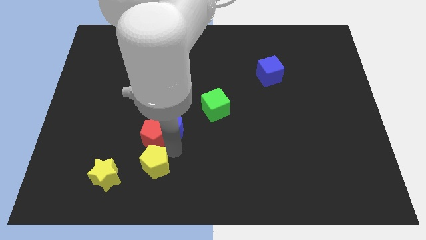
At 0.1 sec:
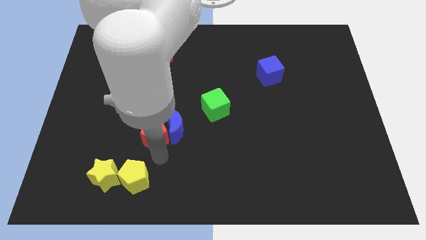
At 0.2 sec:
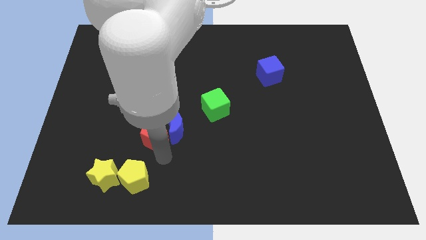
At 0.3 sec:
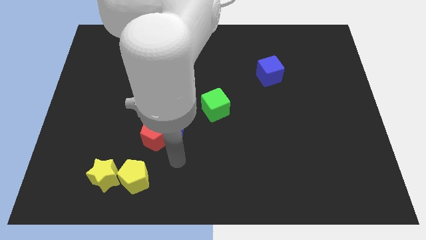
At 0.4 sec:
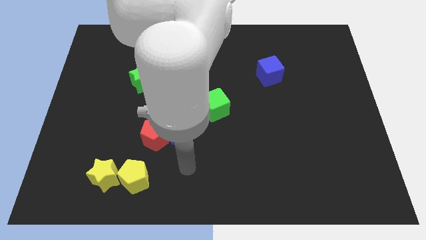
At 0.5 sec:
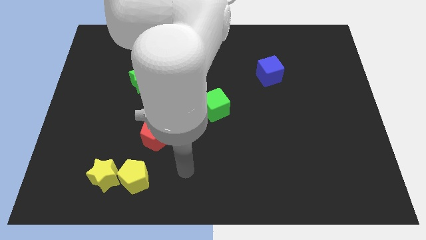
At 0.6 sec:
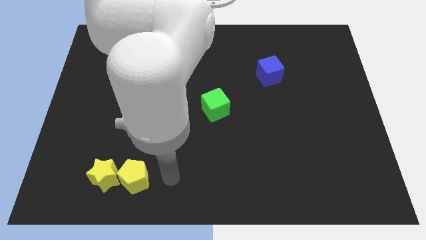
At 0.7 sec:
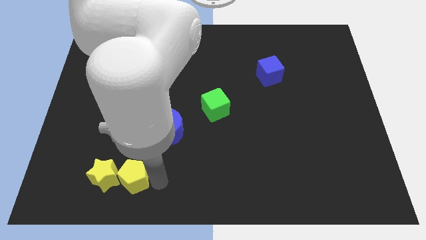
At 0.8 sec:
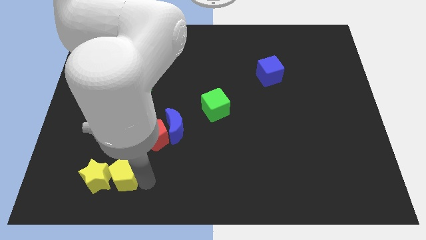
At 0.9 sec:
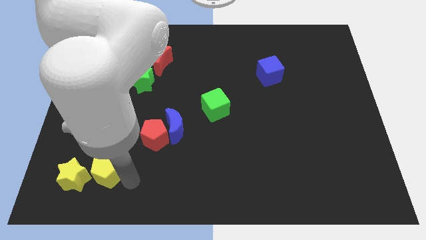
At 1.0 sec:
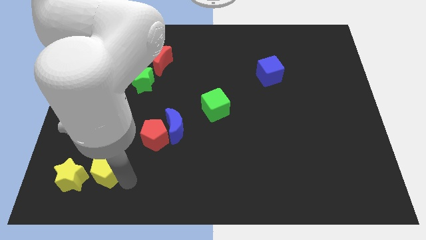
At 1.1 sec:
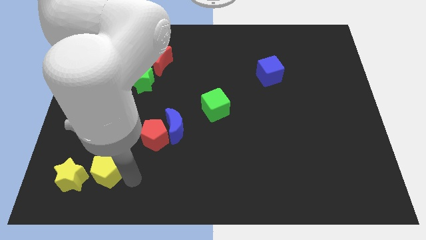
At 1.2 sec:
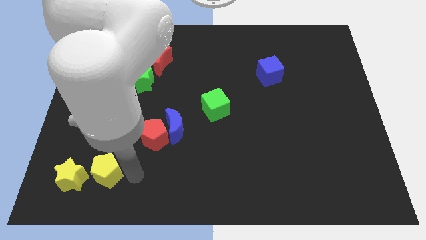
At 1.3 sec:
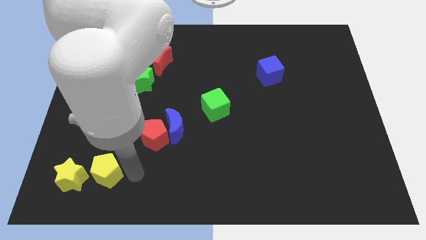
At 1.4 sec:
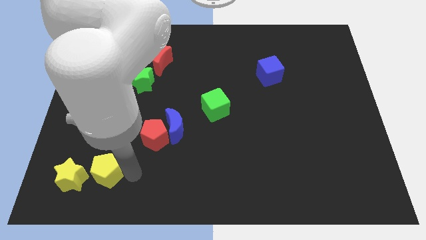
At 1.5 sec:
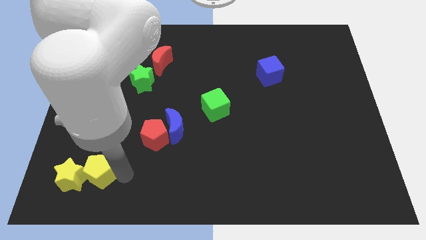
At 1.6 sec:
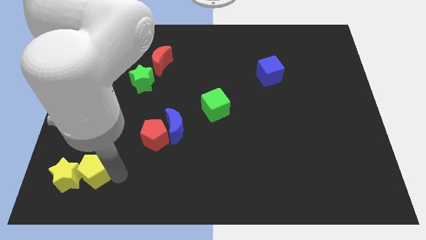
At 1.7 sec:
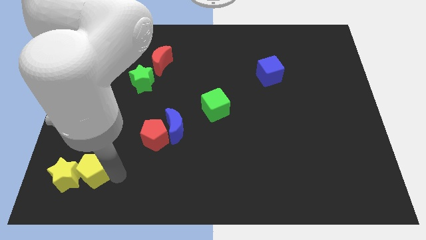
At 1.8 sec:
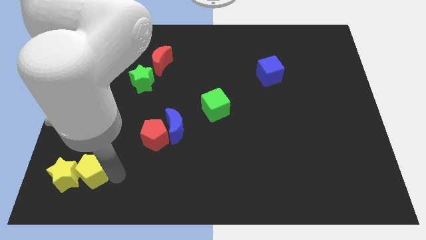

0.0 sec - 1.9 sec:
push the yellow pentagon into the yellow star

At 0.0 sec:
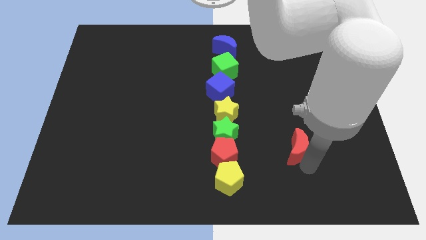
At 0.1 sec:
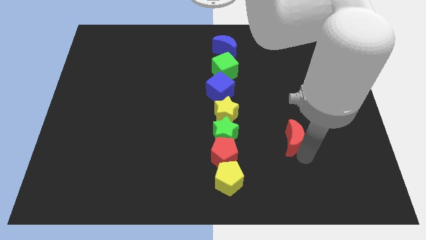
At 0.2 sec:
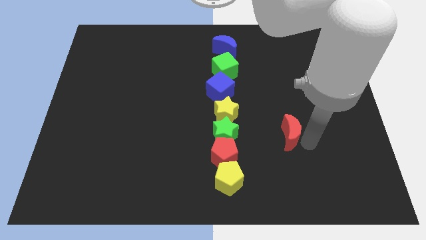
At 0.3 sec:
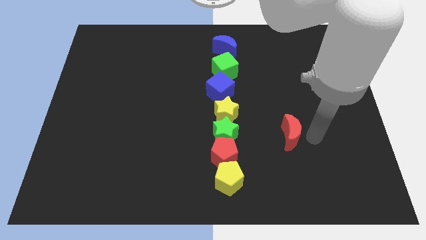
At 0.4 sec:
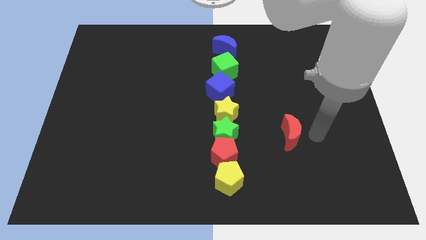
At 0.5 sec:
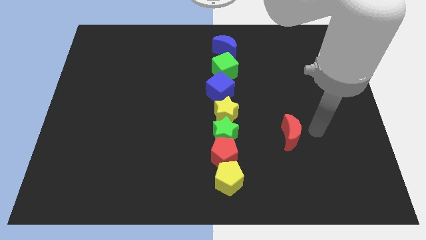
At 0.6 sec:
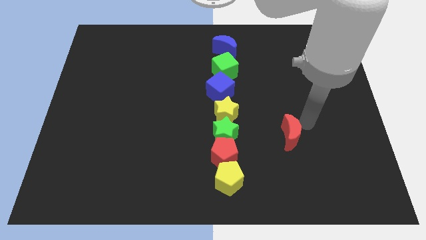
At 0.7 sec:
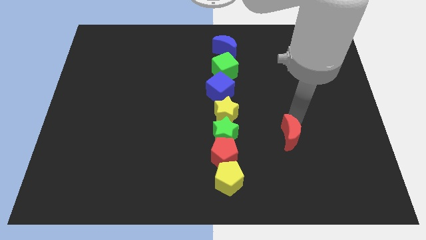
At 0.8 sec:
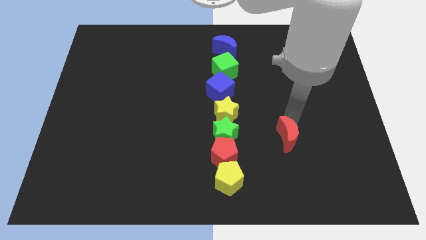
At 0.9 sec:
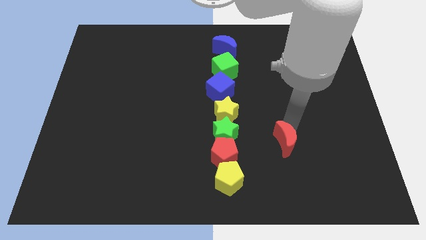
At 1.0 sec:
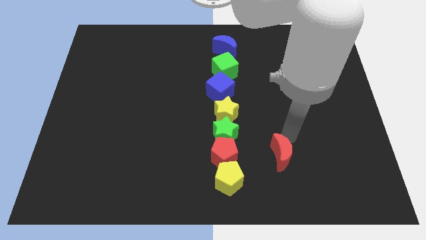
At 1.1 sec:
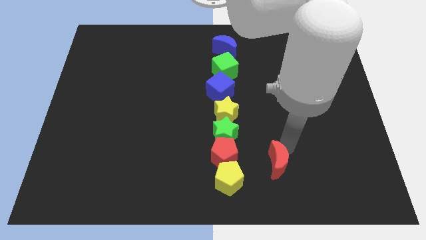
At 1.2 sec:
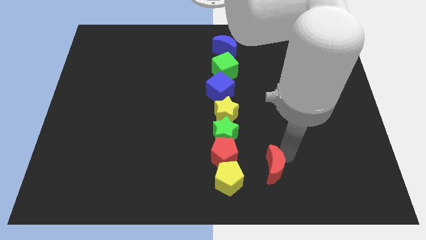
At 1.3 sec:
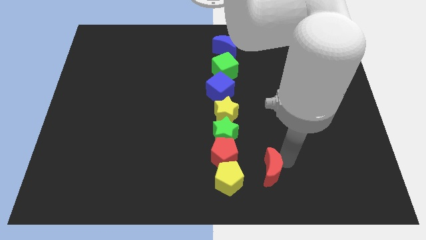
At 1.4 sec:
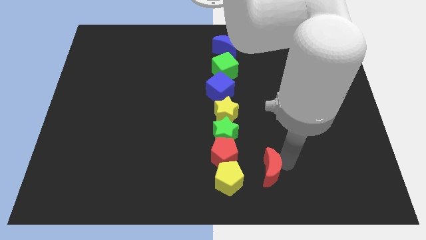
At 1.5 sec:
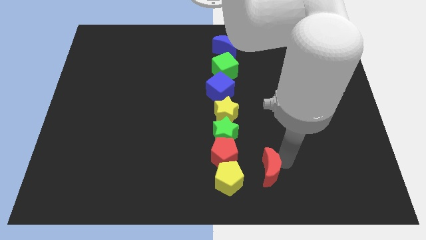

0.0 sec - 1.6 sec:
push the red crescent towards the right side of the yellow pentagon

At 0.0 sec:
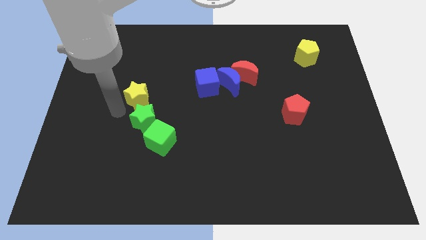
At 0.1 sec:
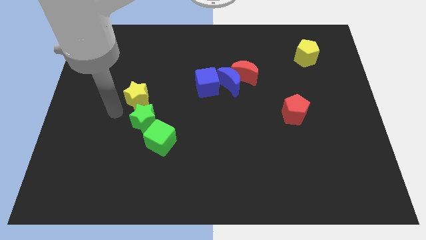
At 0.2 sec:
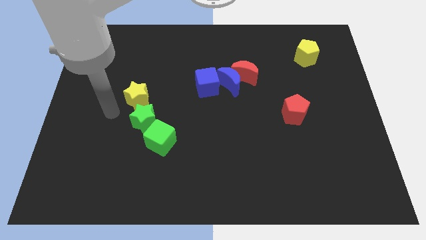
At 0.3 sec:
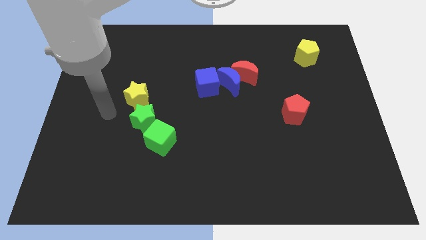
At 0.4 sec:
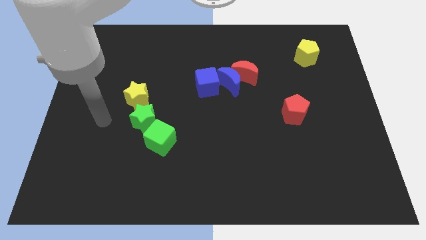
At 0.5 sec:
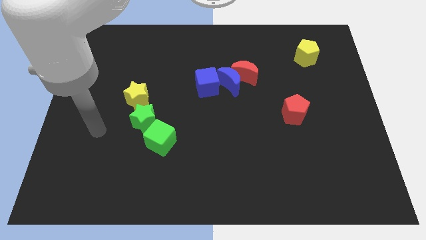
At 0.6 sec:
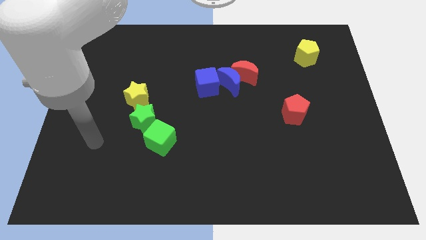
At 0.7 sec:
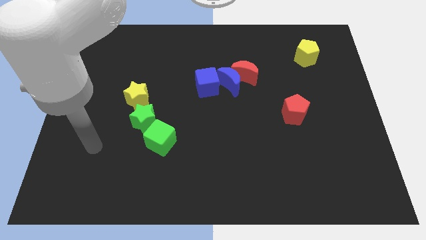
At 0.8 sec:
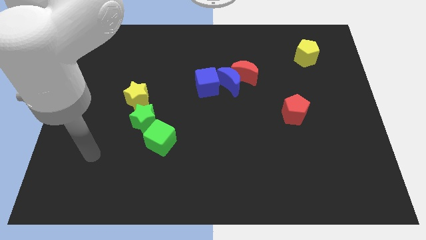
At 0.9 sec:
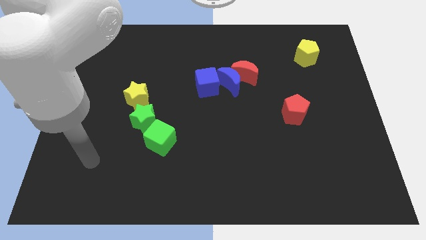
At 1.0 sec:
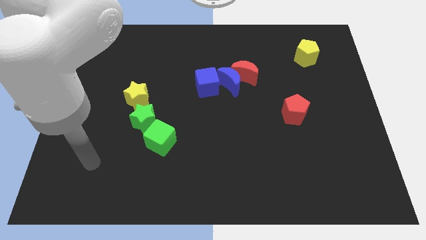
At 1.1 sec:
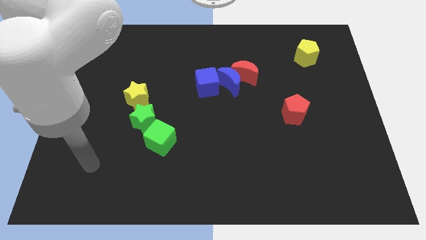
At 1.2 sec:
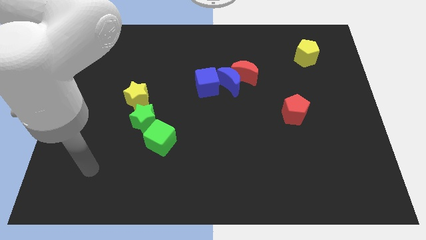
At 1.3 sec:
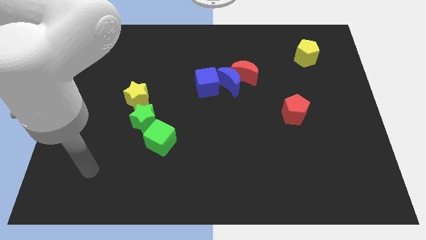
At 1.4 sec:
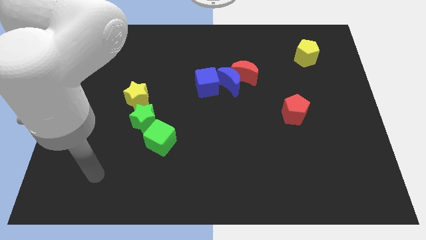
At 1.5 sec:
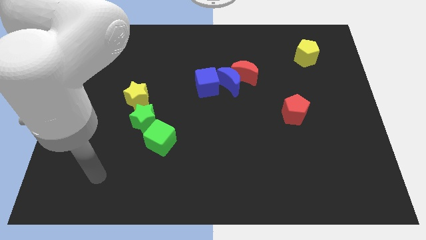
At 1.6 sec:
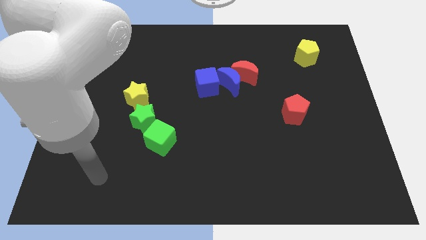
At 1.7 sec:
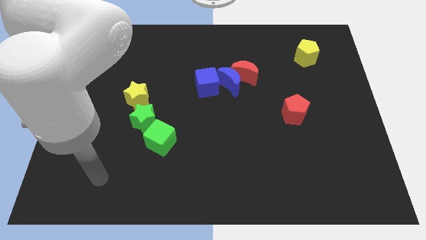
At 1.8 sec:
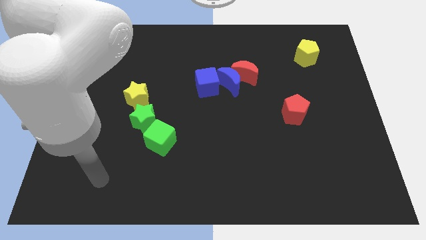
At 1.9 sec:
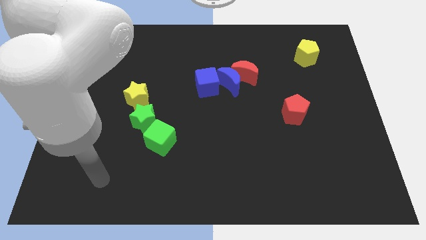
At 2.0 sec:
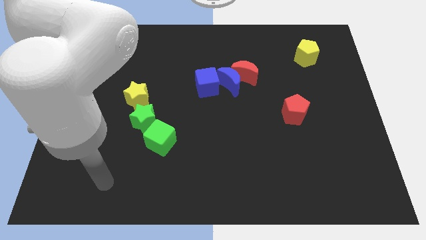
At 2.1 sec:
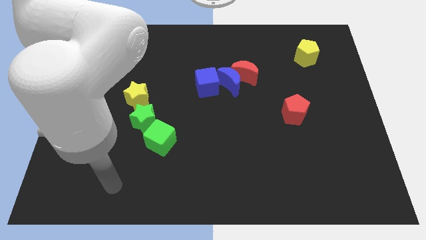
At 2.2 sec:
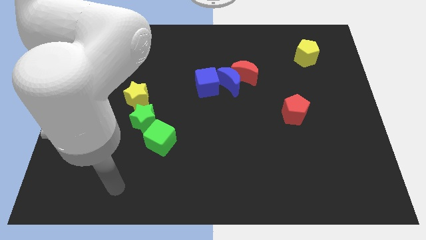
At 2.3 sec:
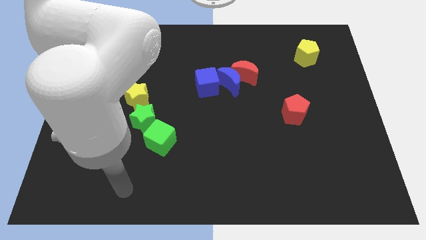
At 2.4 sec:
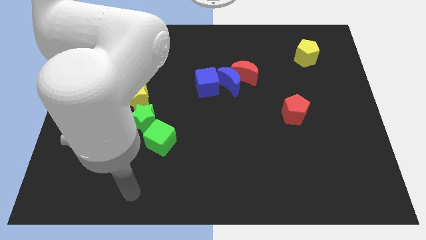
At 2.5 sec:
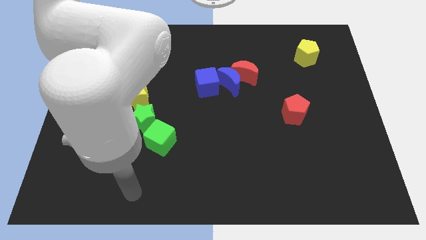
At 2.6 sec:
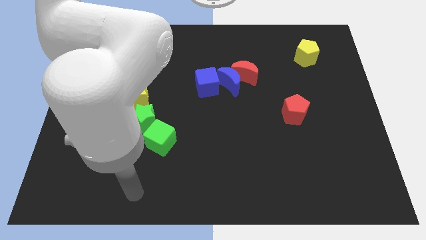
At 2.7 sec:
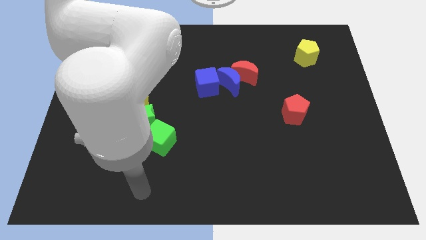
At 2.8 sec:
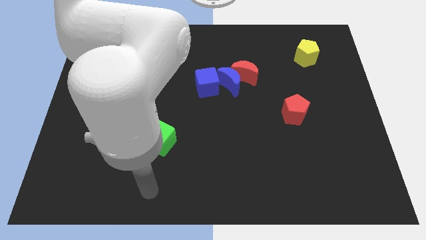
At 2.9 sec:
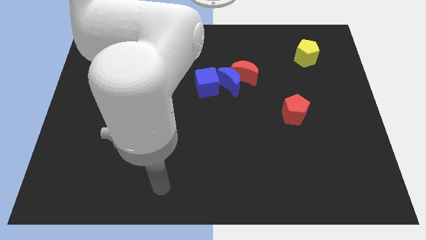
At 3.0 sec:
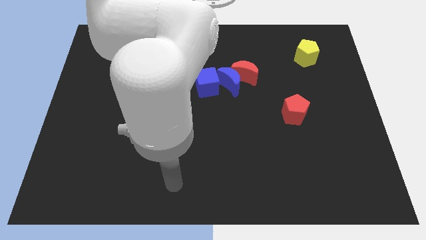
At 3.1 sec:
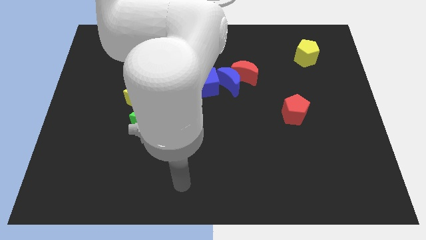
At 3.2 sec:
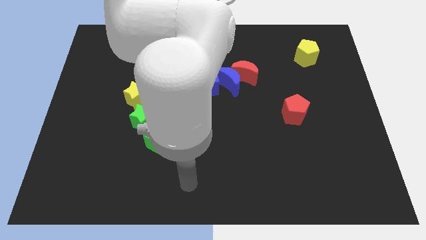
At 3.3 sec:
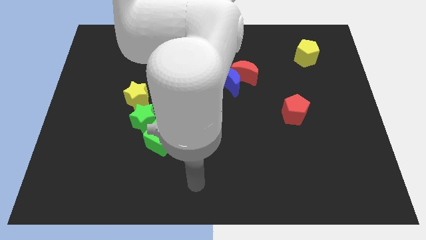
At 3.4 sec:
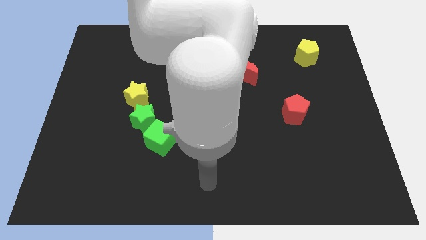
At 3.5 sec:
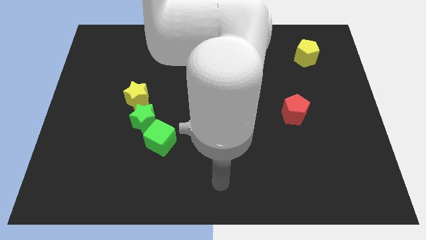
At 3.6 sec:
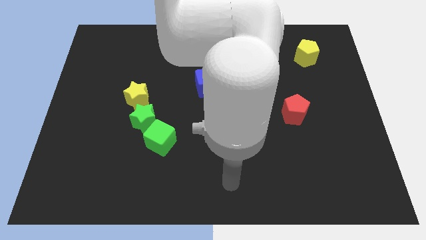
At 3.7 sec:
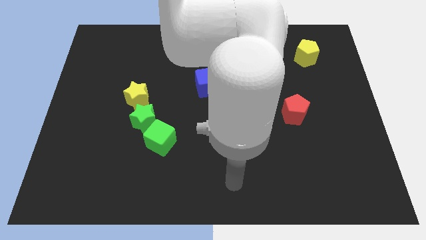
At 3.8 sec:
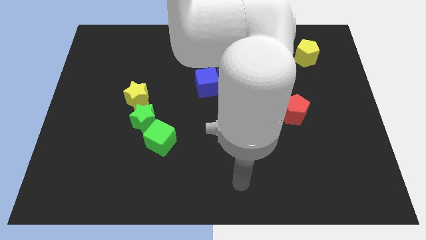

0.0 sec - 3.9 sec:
point the arm at the bottom center of the board

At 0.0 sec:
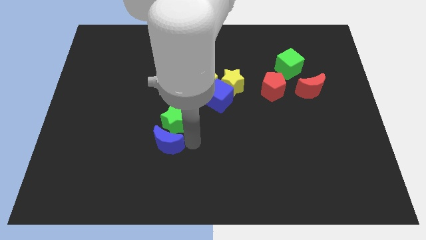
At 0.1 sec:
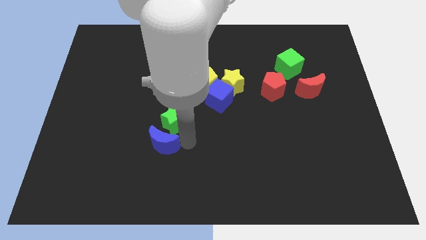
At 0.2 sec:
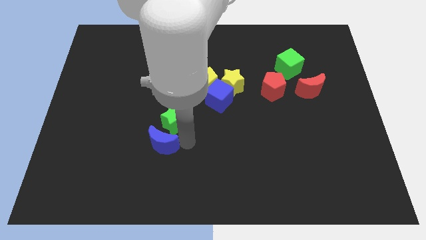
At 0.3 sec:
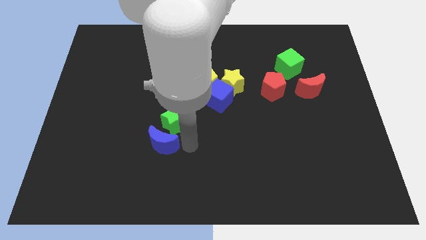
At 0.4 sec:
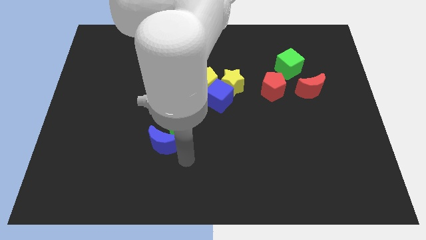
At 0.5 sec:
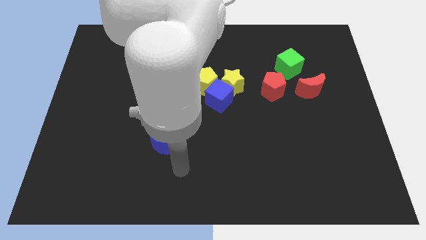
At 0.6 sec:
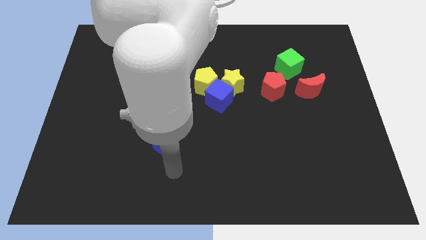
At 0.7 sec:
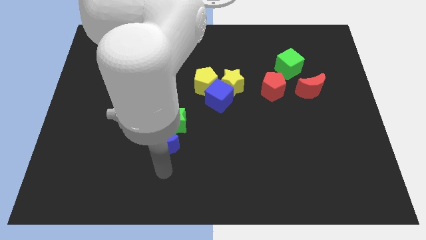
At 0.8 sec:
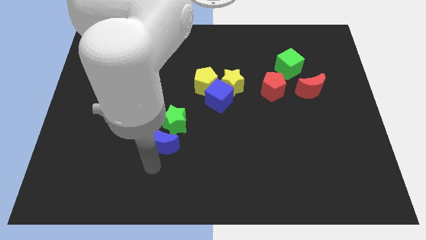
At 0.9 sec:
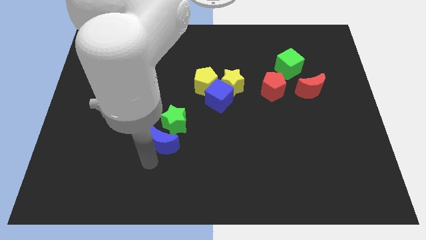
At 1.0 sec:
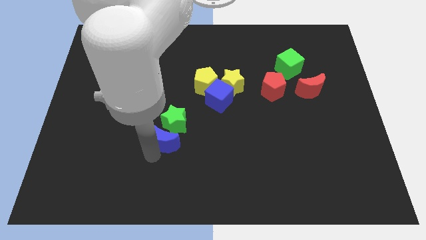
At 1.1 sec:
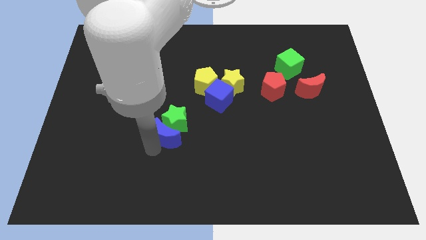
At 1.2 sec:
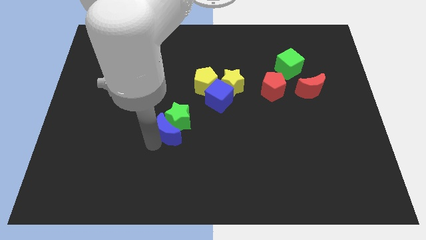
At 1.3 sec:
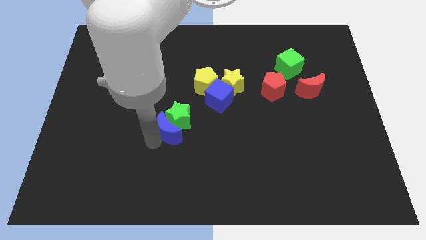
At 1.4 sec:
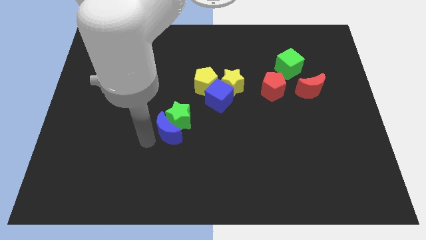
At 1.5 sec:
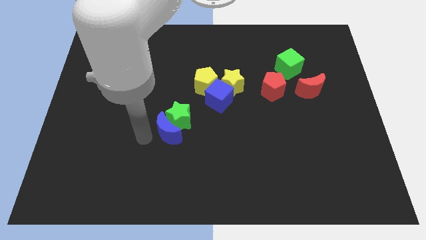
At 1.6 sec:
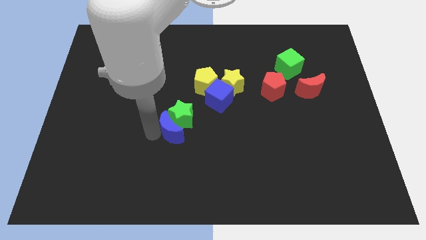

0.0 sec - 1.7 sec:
move the blue crescent into the green cube
